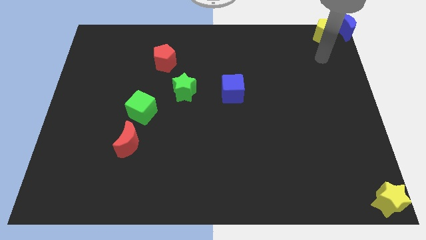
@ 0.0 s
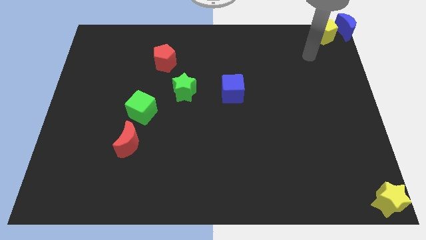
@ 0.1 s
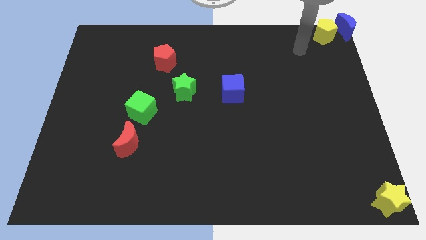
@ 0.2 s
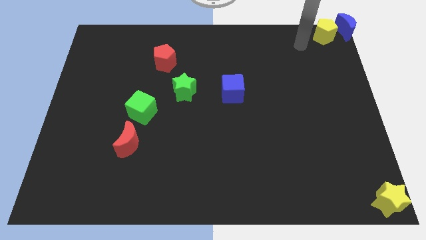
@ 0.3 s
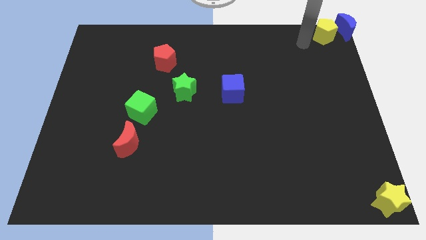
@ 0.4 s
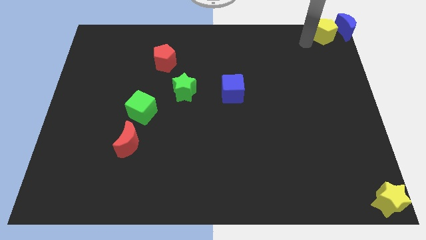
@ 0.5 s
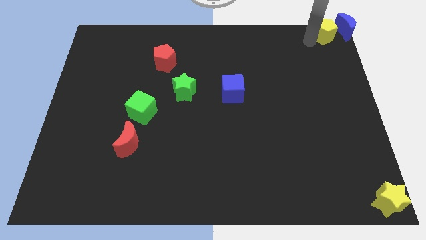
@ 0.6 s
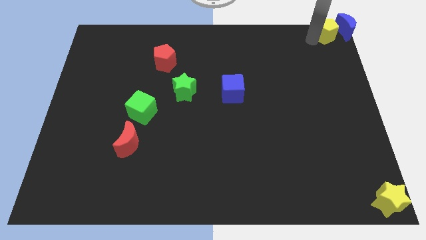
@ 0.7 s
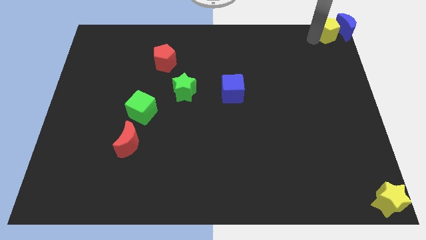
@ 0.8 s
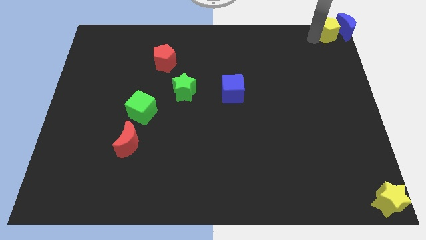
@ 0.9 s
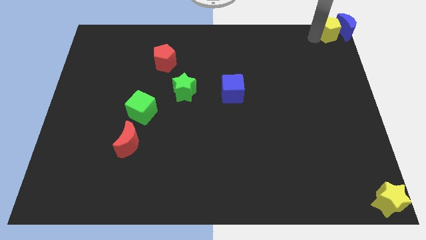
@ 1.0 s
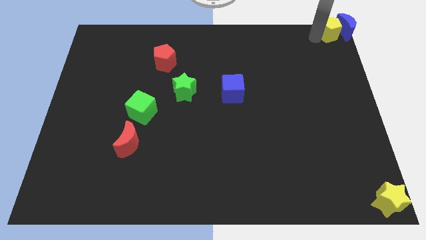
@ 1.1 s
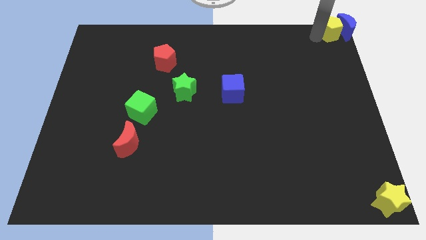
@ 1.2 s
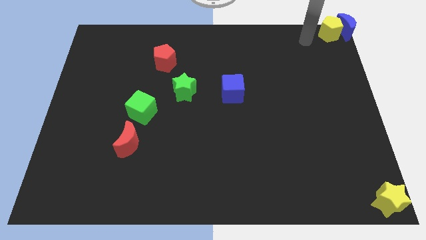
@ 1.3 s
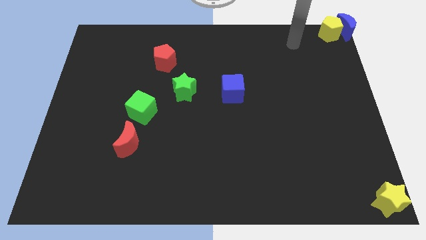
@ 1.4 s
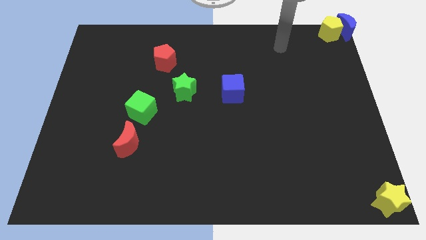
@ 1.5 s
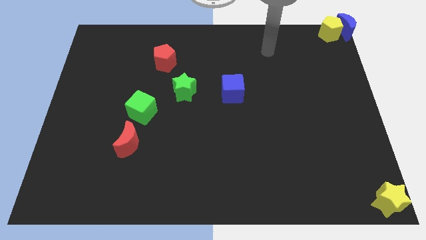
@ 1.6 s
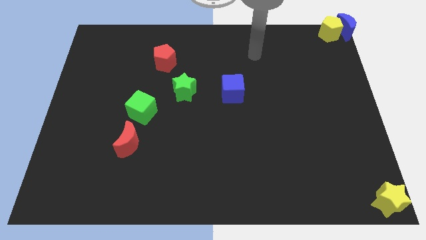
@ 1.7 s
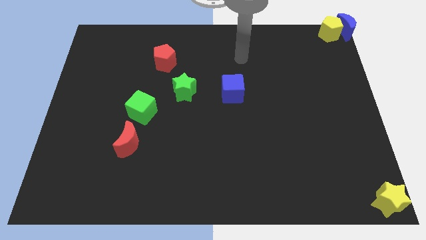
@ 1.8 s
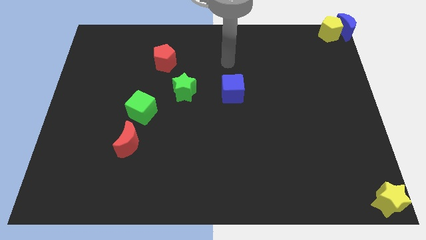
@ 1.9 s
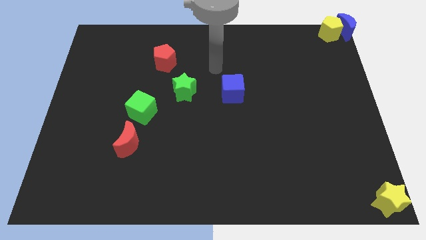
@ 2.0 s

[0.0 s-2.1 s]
move the yellow pentagon into the blue crescent

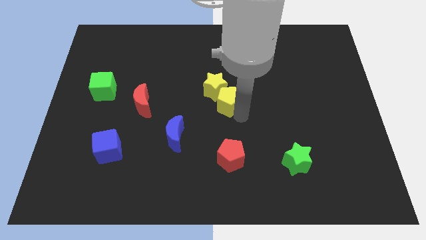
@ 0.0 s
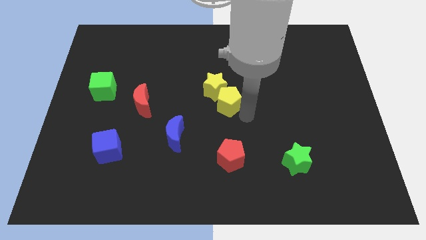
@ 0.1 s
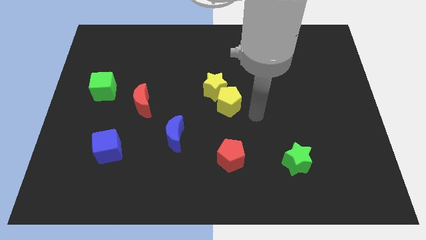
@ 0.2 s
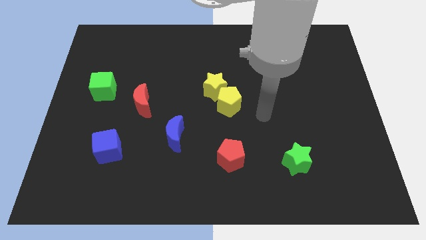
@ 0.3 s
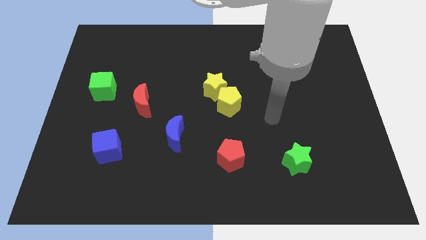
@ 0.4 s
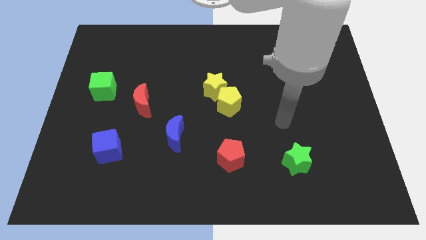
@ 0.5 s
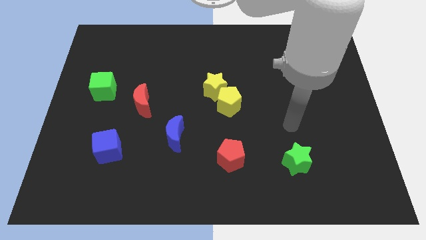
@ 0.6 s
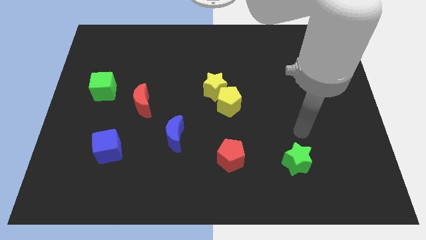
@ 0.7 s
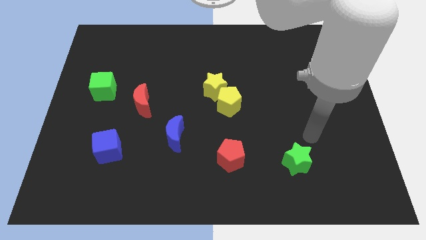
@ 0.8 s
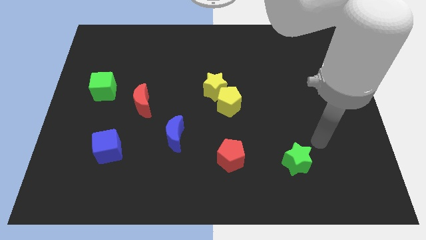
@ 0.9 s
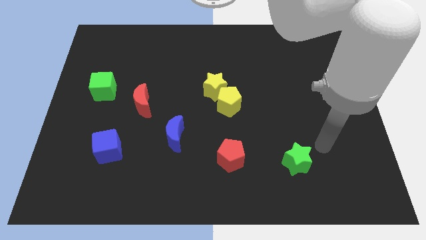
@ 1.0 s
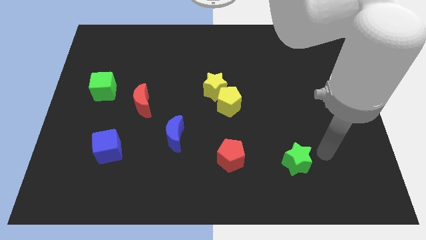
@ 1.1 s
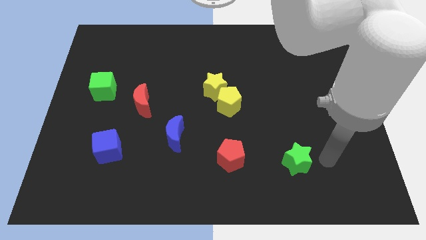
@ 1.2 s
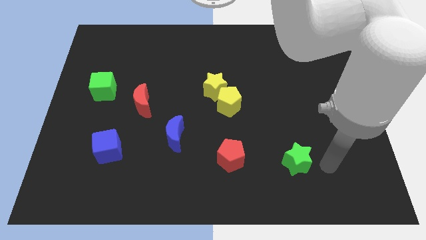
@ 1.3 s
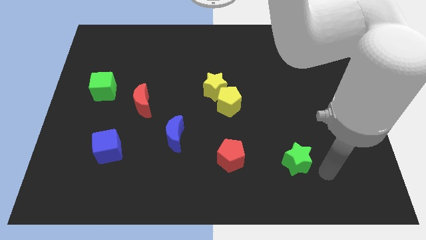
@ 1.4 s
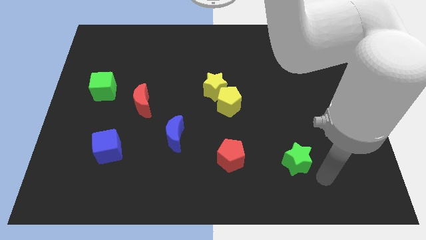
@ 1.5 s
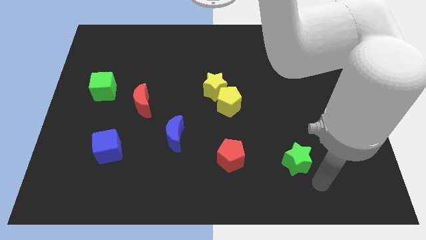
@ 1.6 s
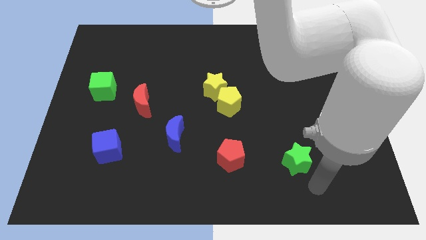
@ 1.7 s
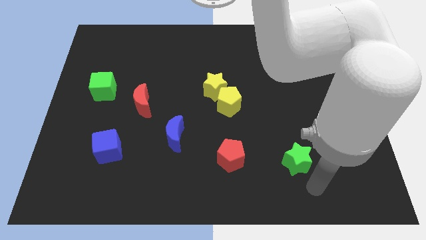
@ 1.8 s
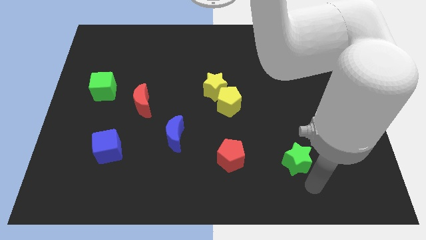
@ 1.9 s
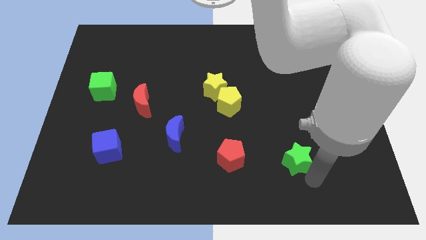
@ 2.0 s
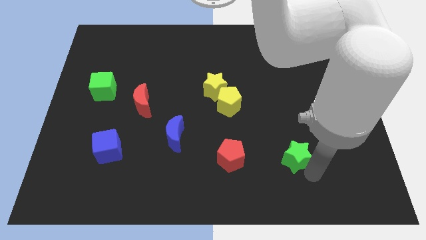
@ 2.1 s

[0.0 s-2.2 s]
point your arm below green star

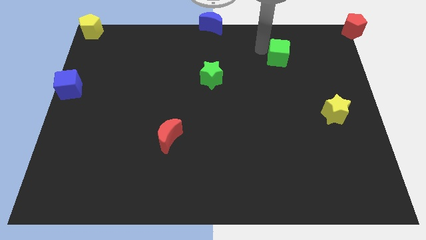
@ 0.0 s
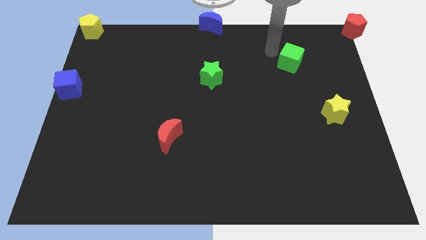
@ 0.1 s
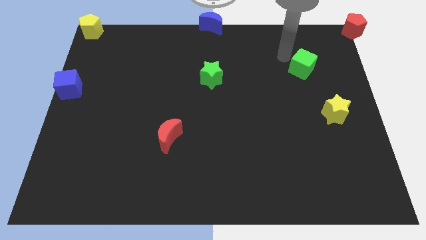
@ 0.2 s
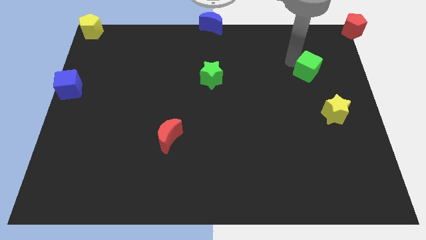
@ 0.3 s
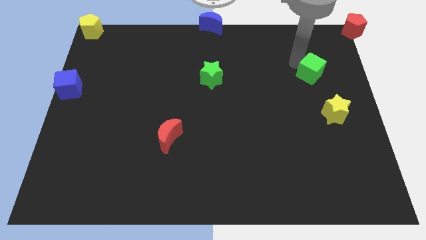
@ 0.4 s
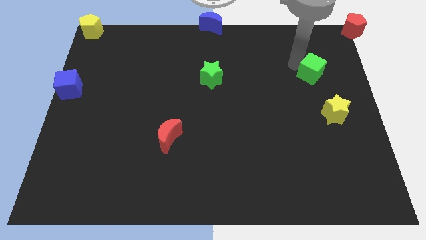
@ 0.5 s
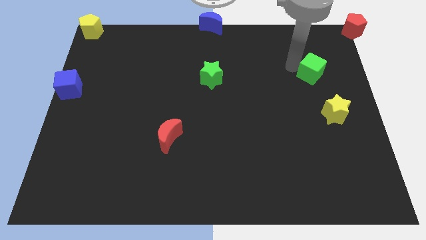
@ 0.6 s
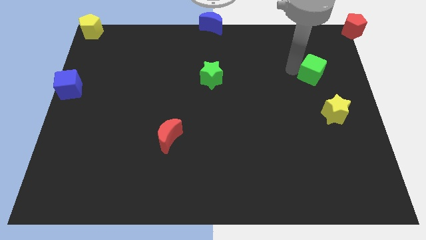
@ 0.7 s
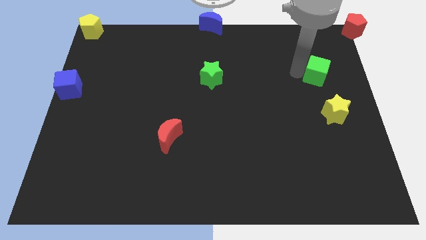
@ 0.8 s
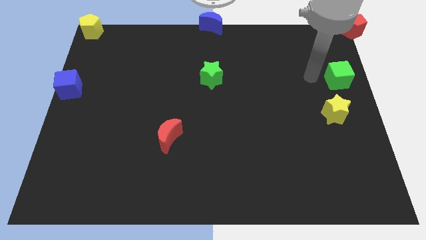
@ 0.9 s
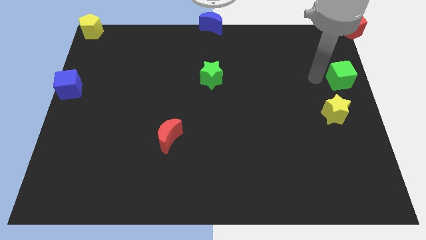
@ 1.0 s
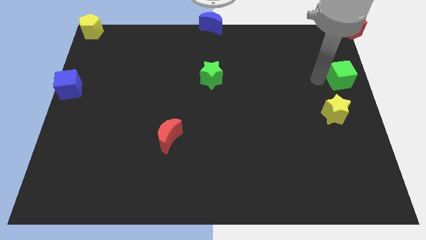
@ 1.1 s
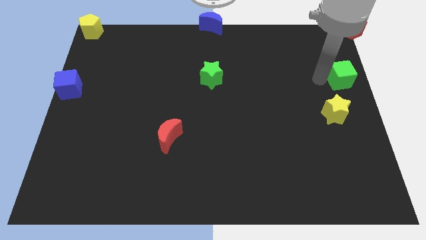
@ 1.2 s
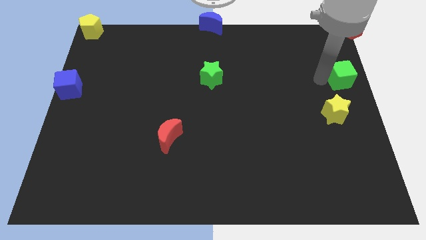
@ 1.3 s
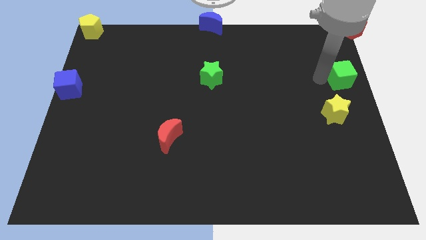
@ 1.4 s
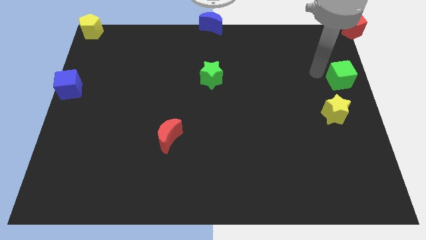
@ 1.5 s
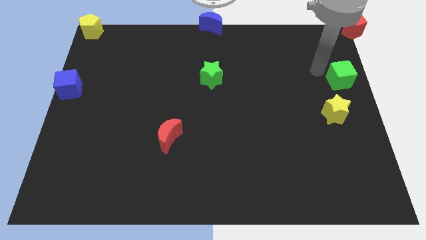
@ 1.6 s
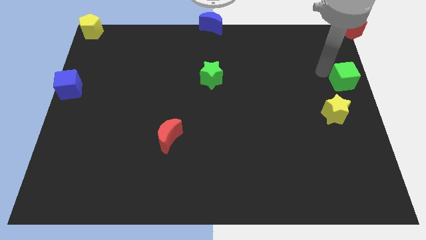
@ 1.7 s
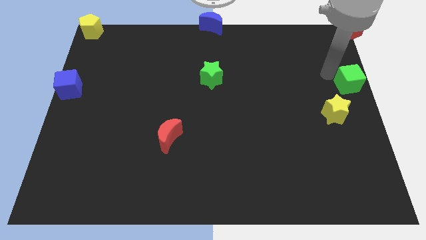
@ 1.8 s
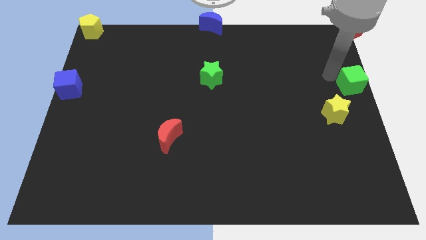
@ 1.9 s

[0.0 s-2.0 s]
drag the green cube to the center right

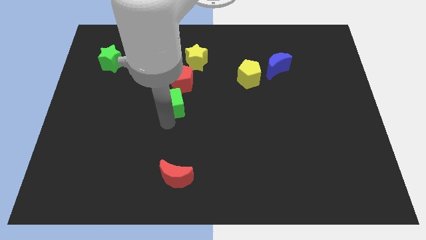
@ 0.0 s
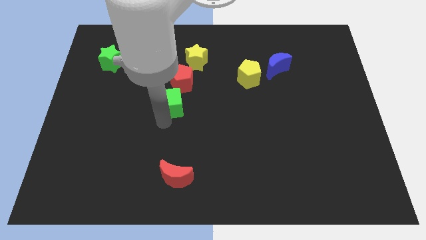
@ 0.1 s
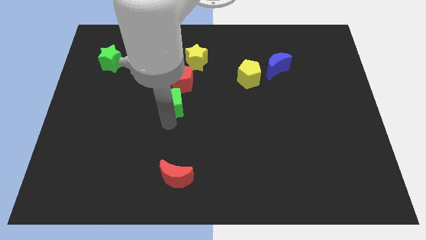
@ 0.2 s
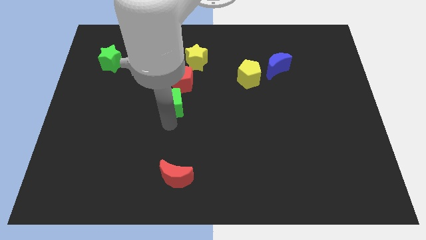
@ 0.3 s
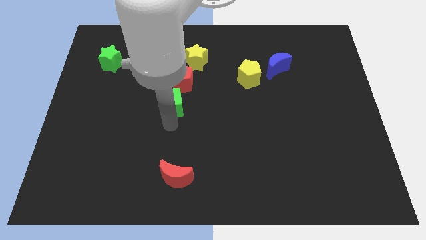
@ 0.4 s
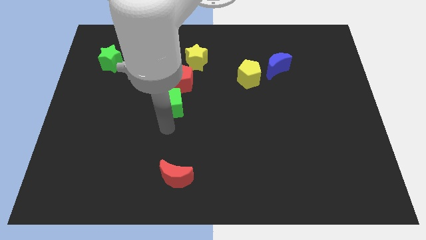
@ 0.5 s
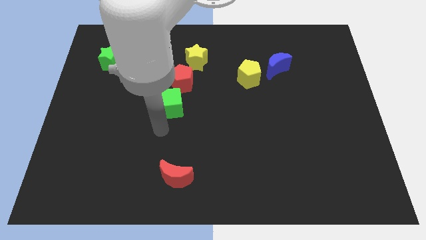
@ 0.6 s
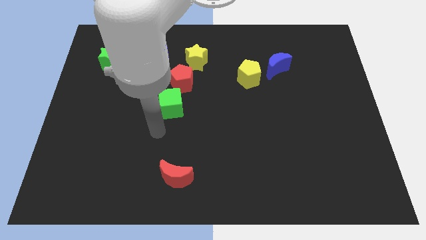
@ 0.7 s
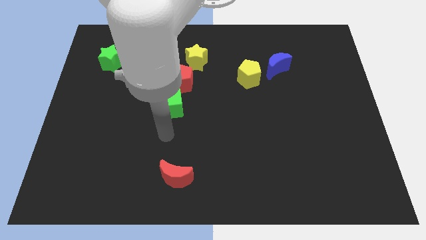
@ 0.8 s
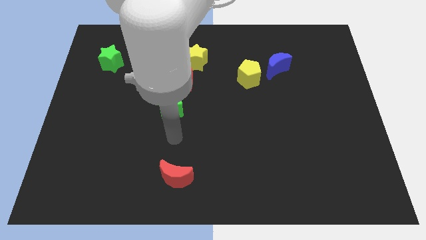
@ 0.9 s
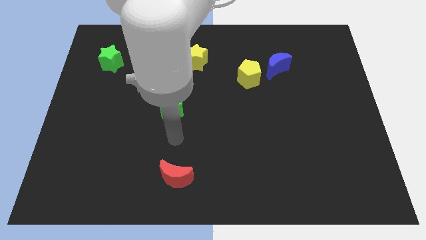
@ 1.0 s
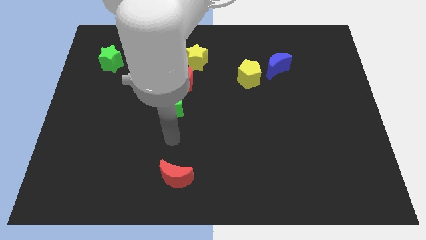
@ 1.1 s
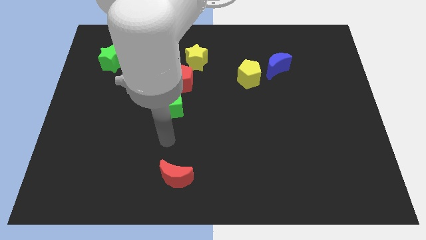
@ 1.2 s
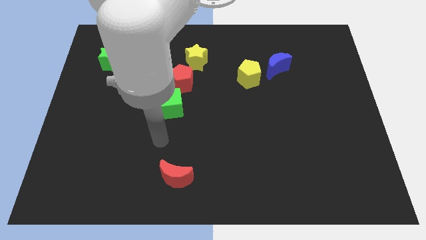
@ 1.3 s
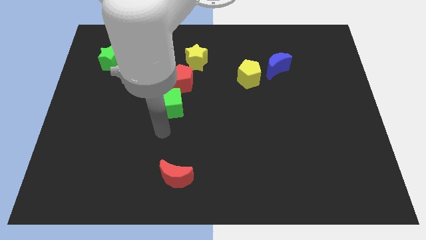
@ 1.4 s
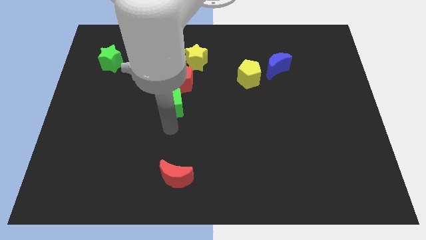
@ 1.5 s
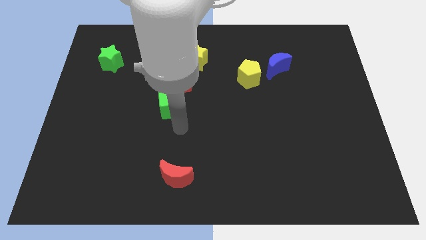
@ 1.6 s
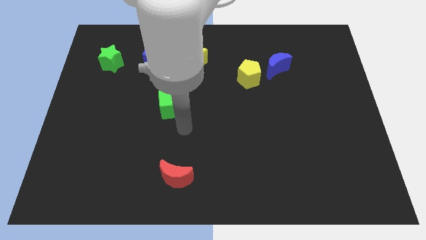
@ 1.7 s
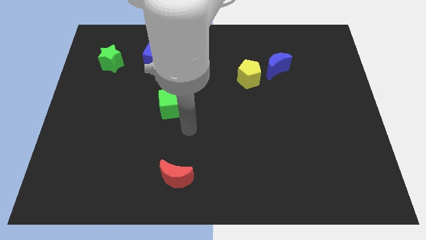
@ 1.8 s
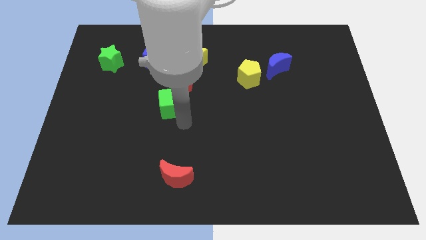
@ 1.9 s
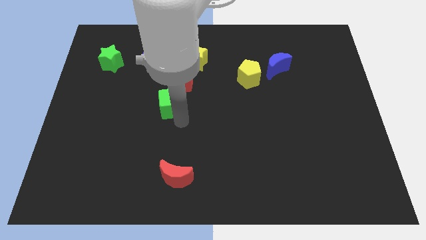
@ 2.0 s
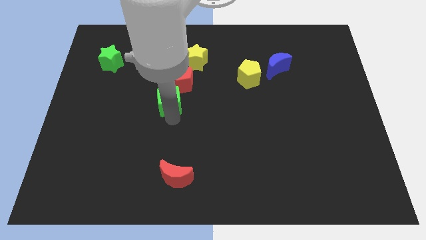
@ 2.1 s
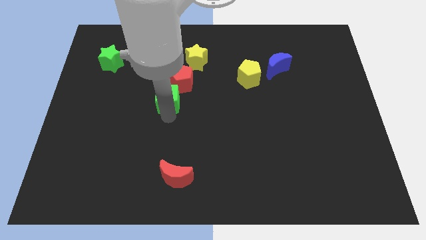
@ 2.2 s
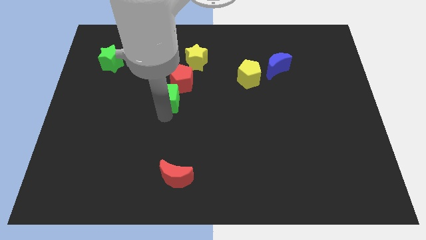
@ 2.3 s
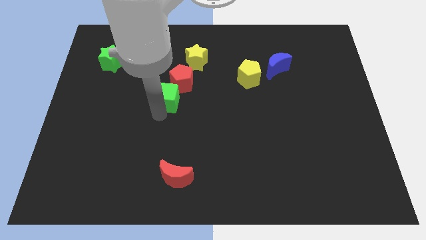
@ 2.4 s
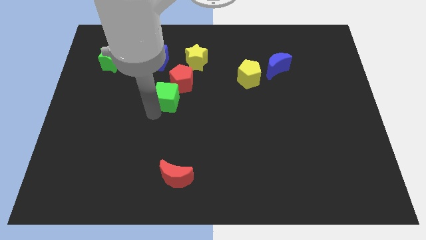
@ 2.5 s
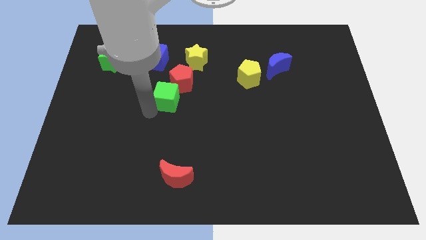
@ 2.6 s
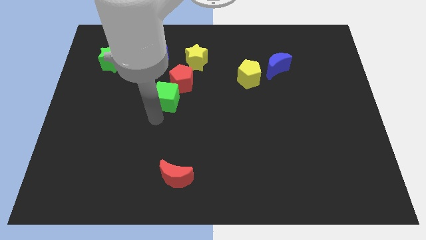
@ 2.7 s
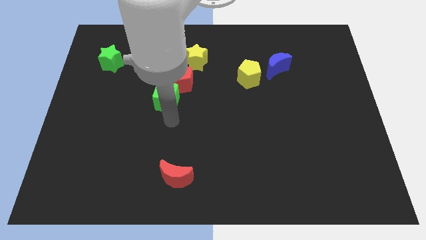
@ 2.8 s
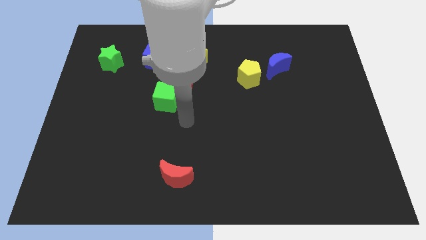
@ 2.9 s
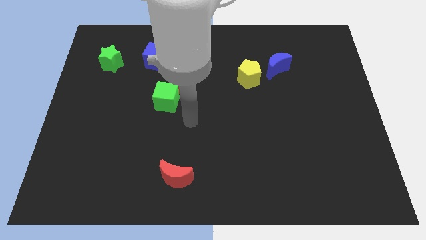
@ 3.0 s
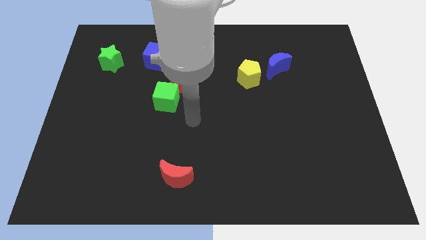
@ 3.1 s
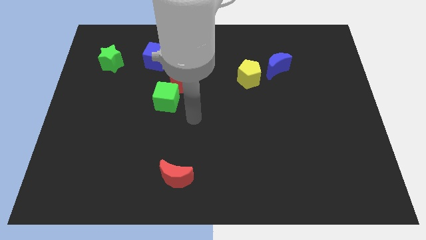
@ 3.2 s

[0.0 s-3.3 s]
slightly push green cube into the red pentagon
